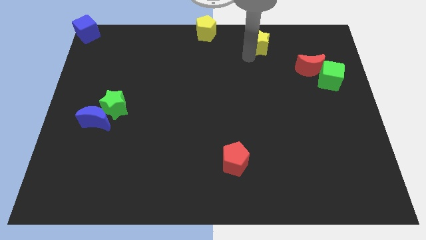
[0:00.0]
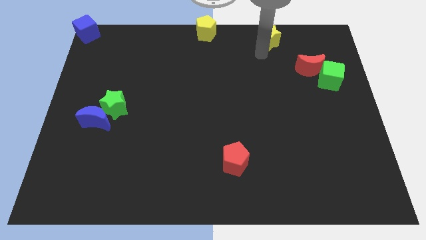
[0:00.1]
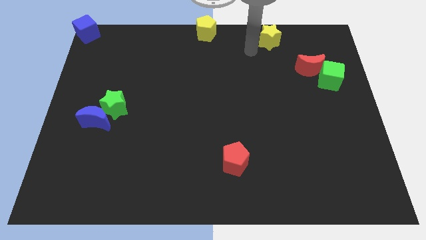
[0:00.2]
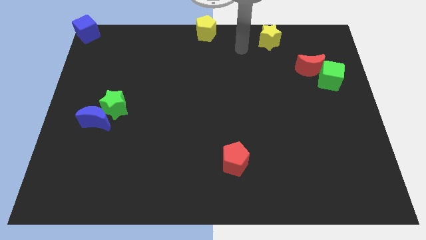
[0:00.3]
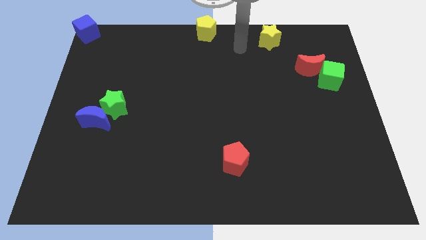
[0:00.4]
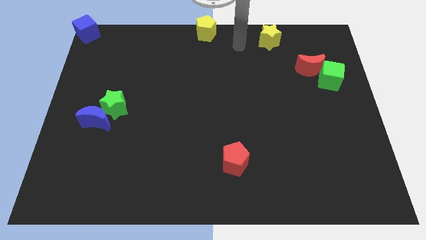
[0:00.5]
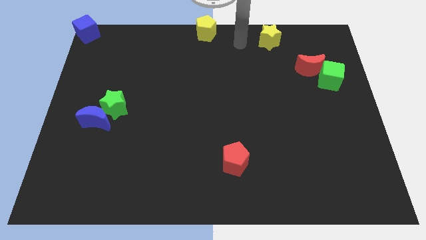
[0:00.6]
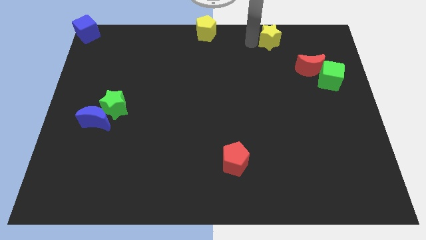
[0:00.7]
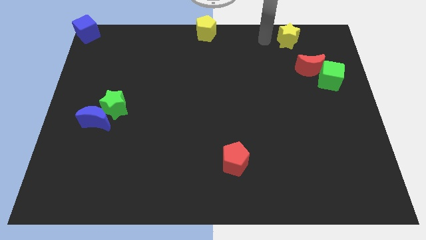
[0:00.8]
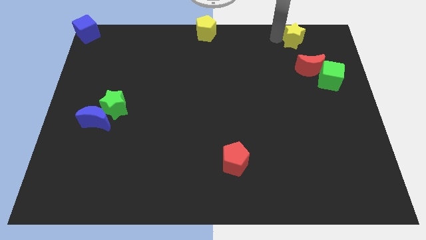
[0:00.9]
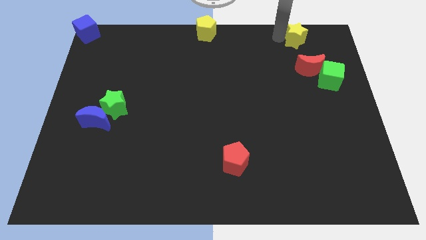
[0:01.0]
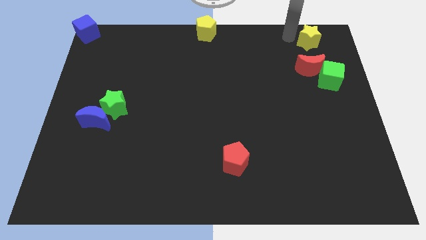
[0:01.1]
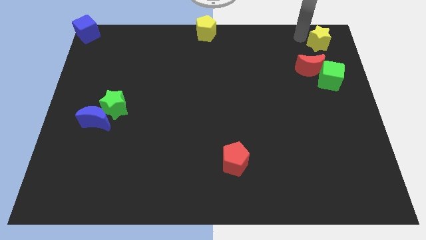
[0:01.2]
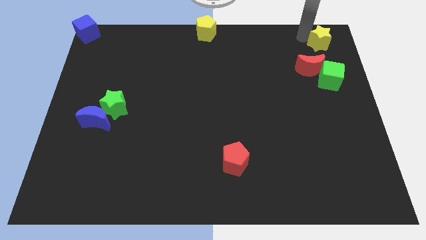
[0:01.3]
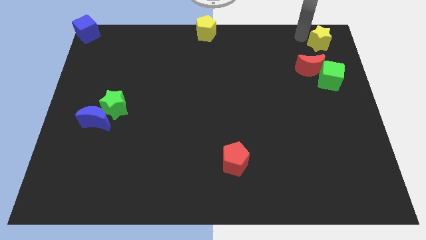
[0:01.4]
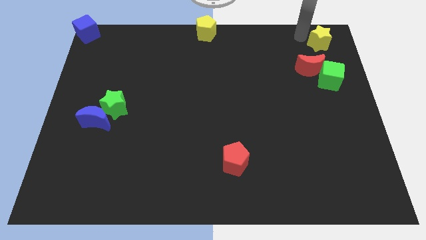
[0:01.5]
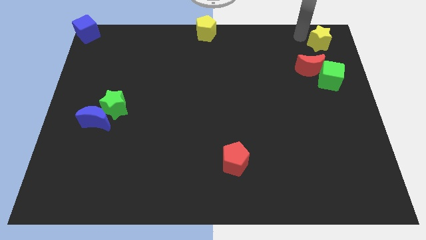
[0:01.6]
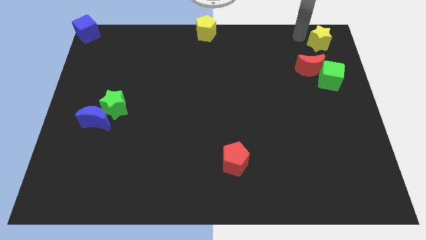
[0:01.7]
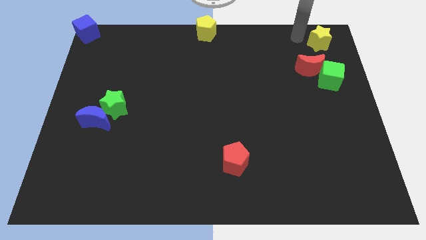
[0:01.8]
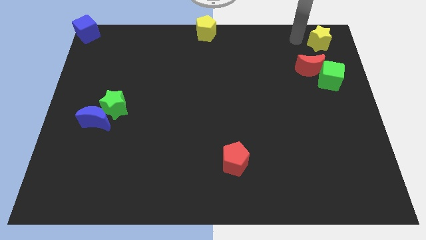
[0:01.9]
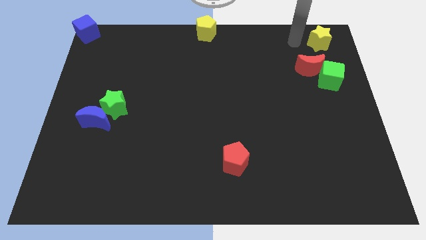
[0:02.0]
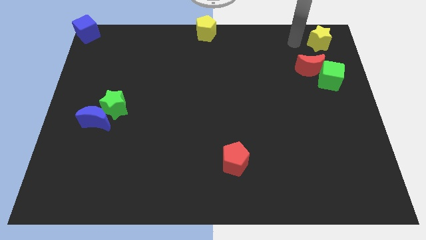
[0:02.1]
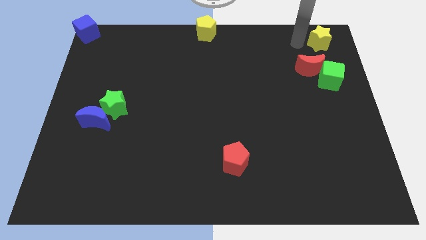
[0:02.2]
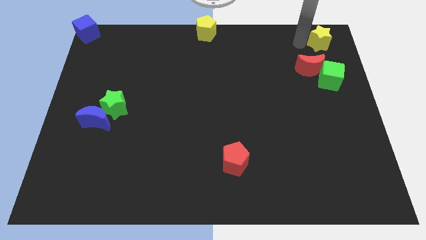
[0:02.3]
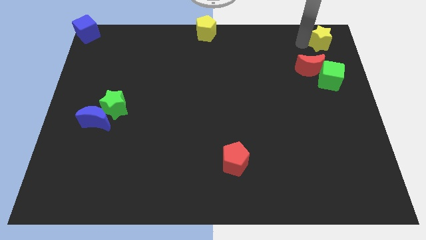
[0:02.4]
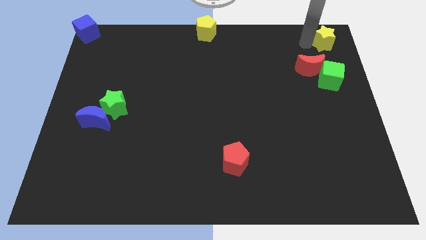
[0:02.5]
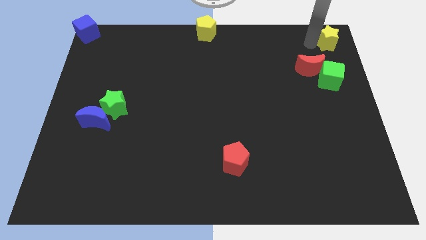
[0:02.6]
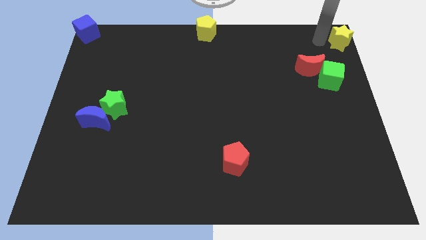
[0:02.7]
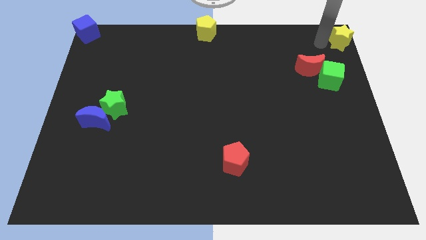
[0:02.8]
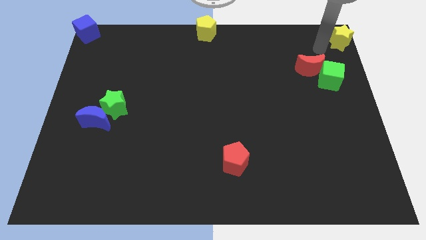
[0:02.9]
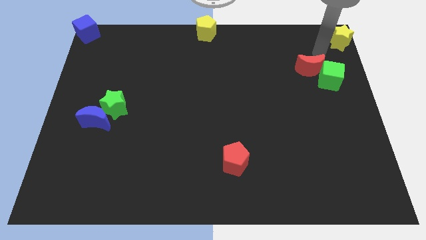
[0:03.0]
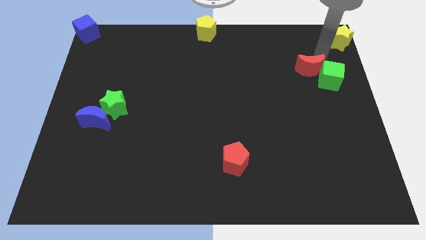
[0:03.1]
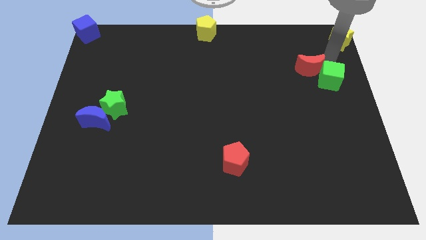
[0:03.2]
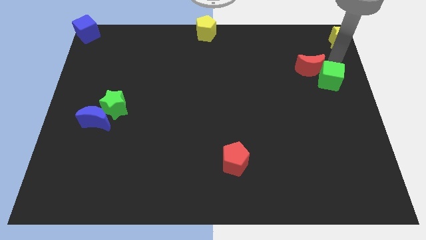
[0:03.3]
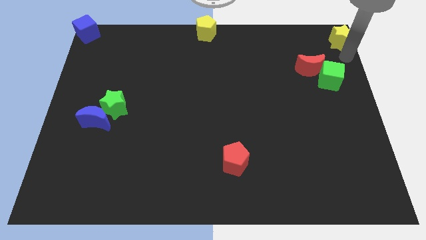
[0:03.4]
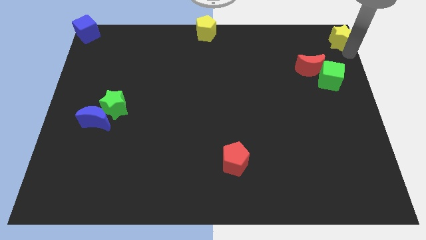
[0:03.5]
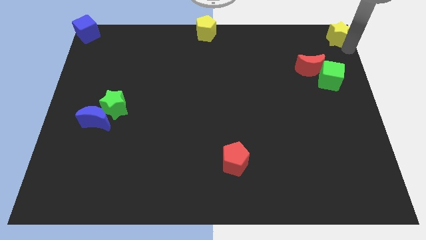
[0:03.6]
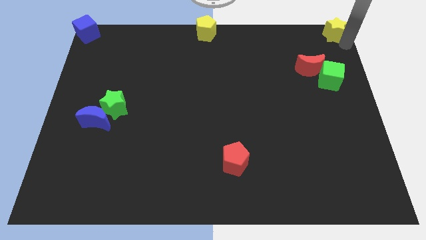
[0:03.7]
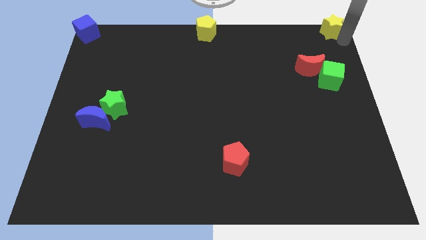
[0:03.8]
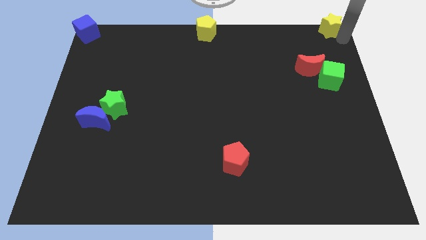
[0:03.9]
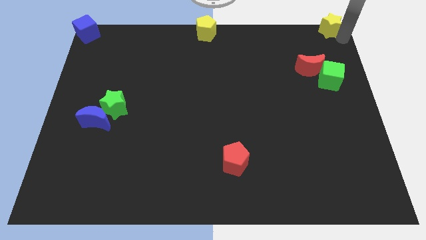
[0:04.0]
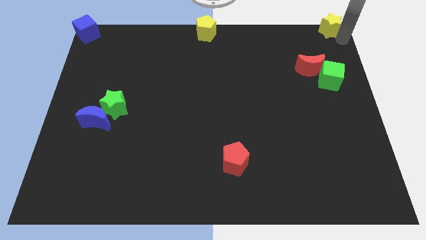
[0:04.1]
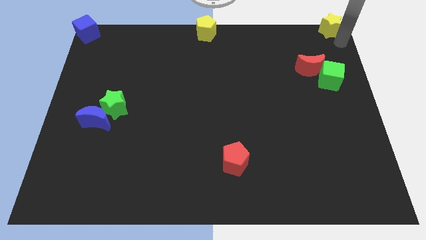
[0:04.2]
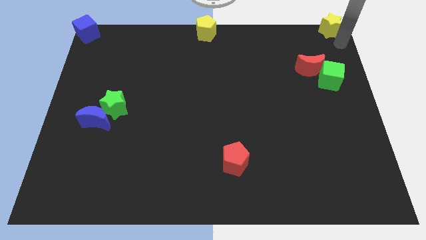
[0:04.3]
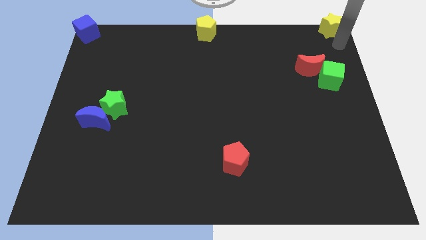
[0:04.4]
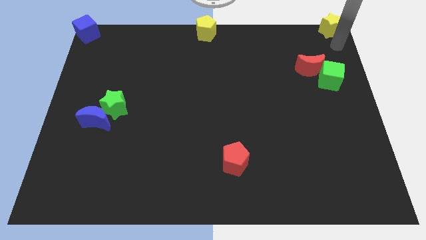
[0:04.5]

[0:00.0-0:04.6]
move the yellow star to the top right corner

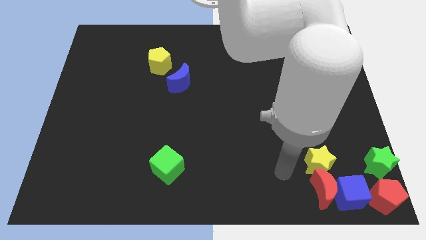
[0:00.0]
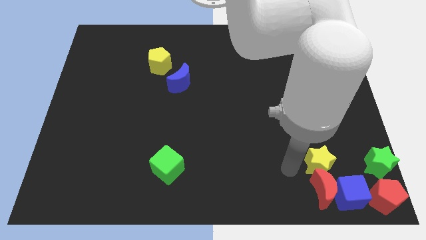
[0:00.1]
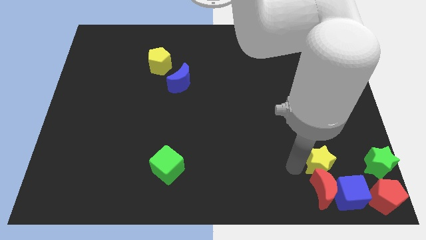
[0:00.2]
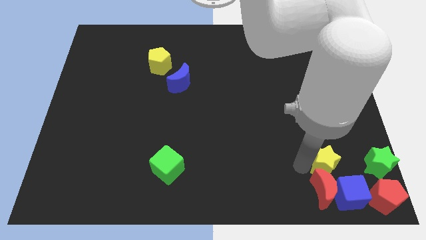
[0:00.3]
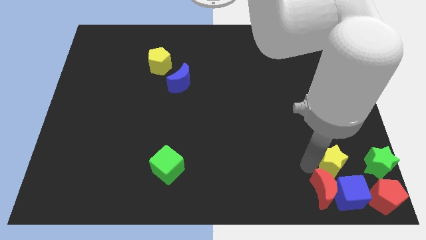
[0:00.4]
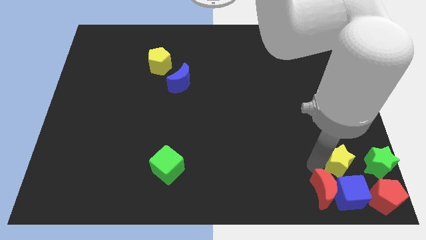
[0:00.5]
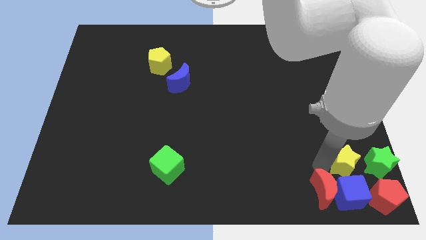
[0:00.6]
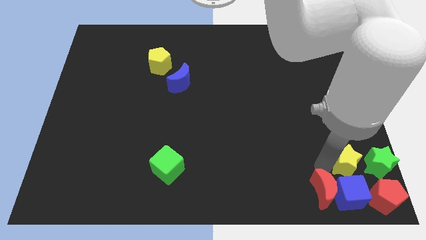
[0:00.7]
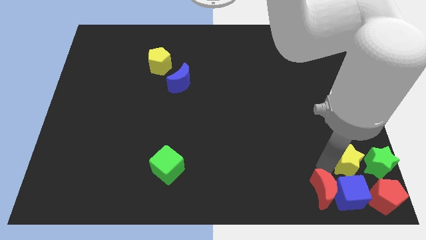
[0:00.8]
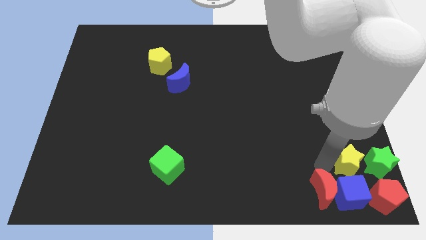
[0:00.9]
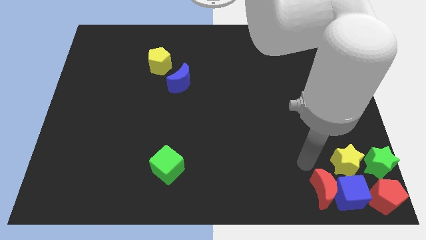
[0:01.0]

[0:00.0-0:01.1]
move the yellow star above the blue cube

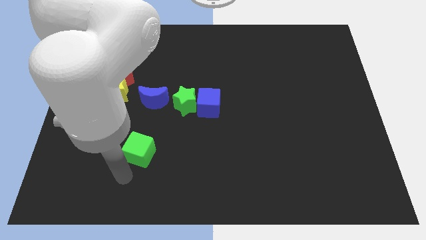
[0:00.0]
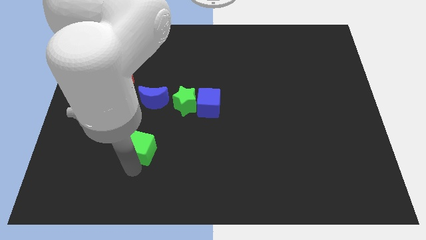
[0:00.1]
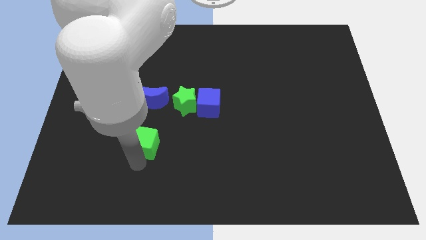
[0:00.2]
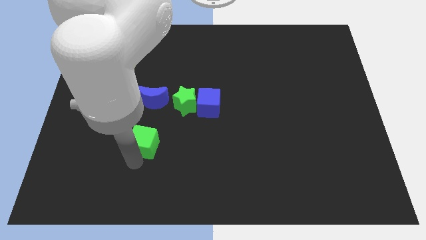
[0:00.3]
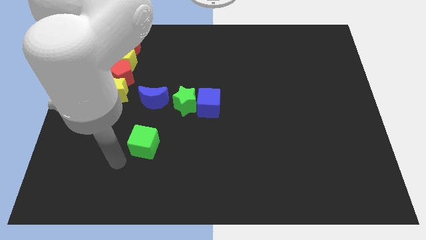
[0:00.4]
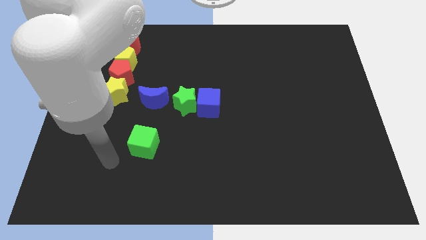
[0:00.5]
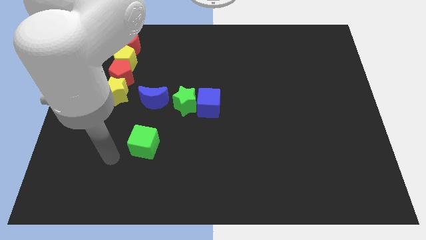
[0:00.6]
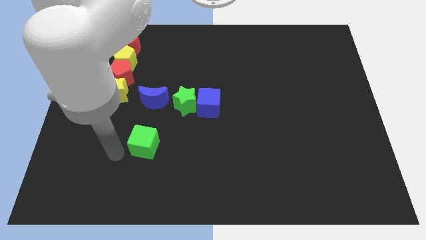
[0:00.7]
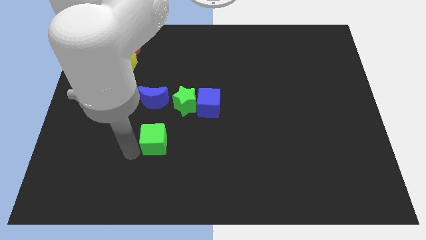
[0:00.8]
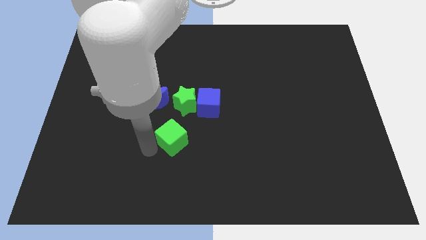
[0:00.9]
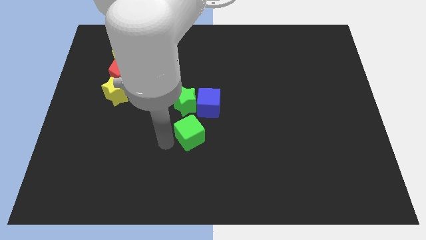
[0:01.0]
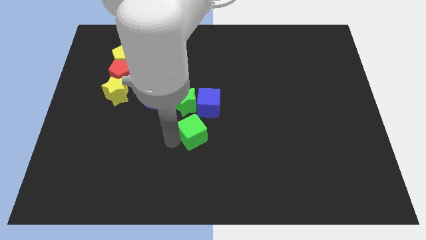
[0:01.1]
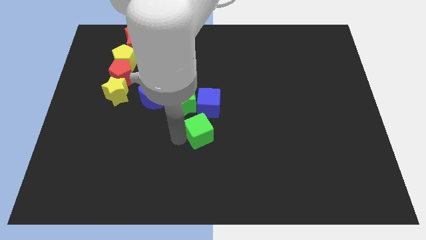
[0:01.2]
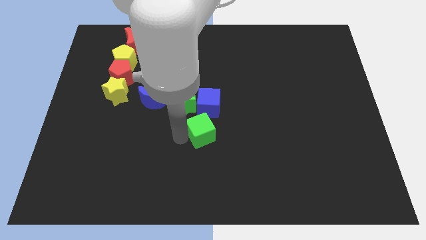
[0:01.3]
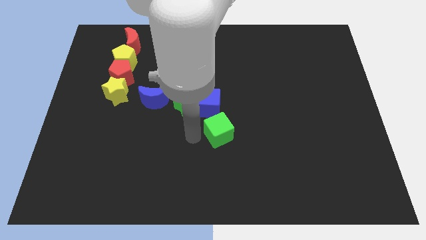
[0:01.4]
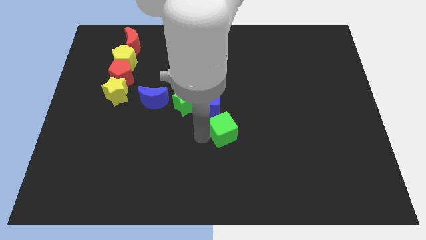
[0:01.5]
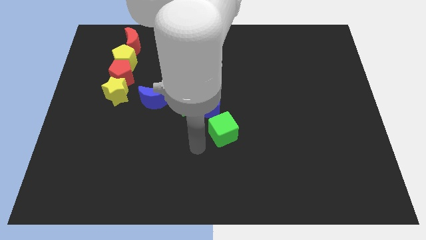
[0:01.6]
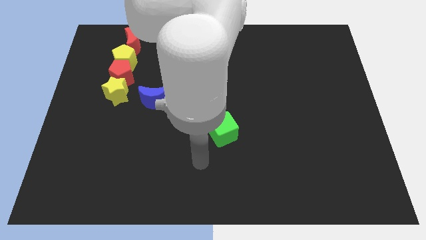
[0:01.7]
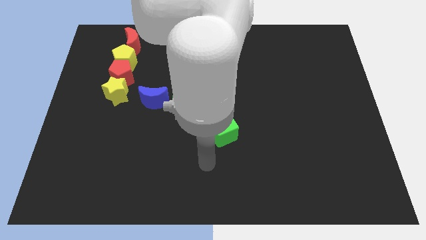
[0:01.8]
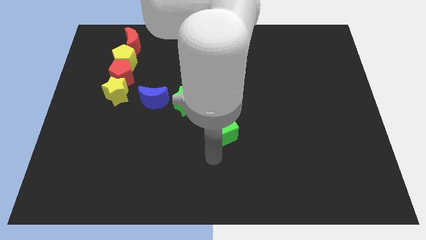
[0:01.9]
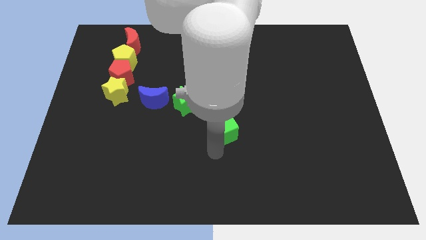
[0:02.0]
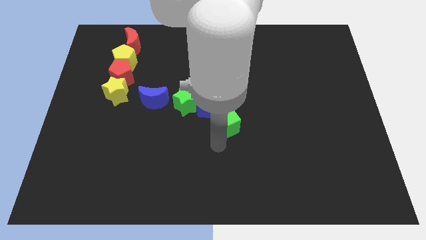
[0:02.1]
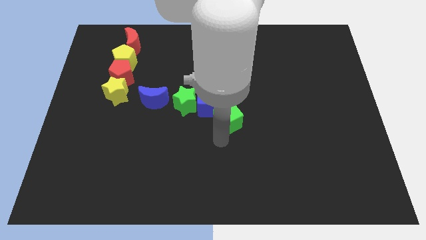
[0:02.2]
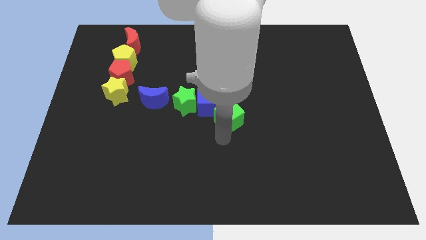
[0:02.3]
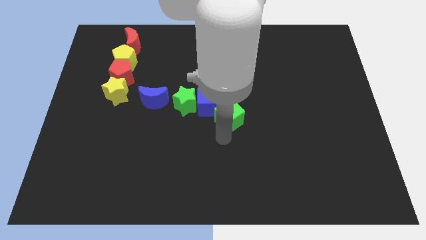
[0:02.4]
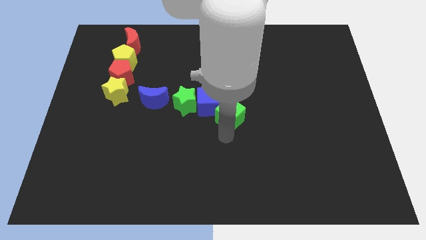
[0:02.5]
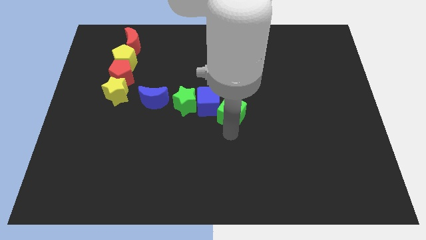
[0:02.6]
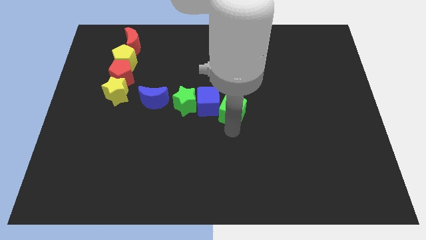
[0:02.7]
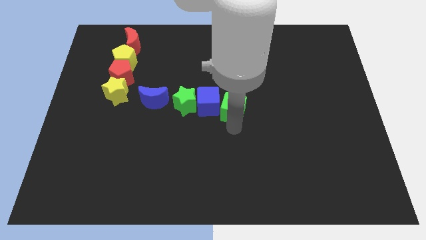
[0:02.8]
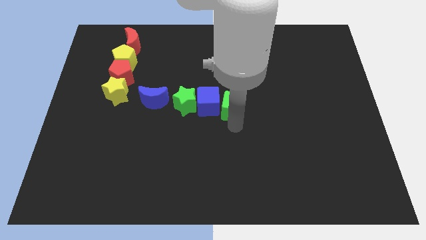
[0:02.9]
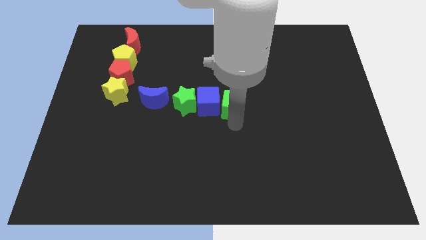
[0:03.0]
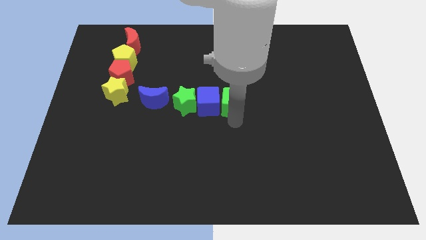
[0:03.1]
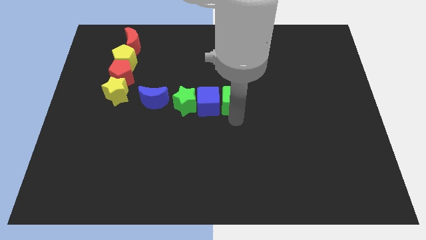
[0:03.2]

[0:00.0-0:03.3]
move the green cube to the right of the blue cube
